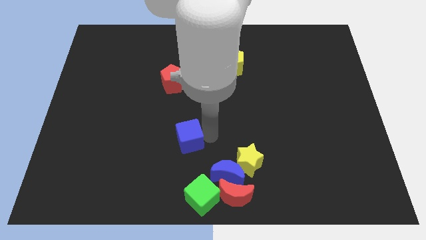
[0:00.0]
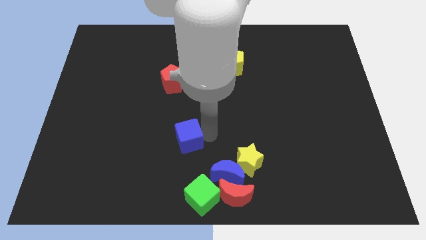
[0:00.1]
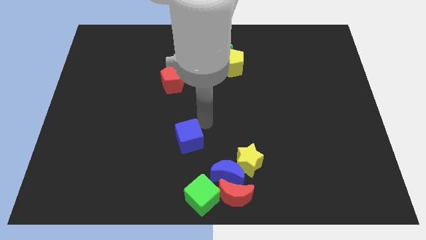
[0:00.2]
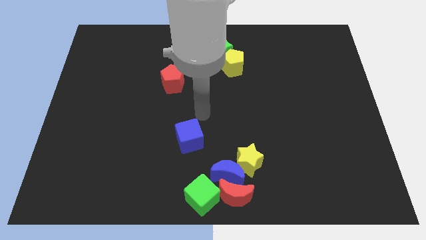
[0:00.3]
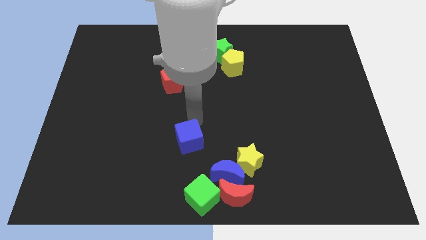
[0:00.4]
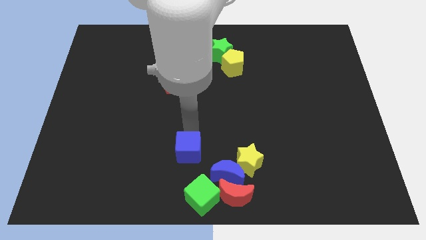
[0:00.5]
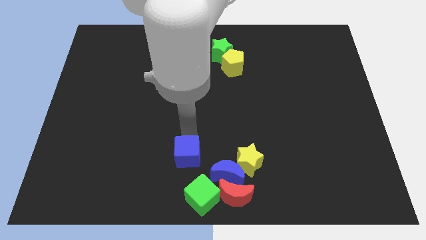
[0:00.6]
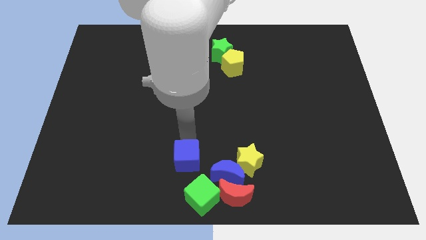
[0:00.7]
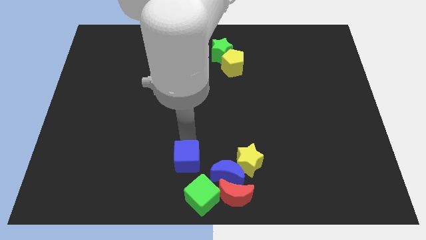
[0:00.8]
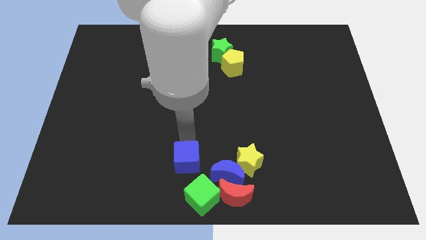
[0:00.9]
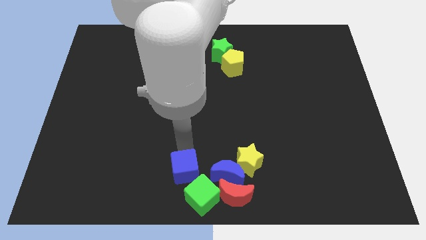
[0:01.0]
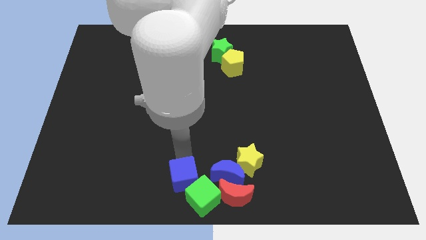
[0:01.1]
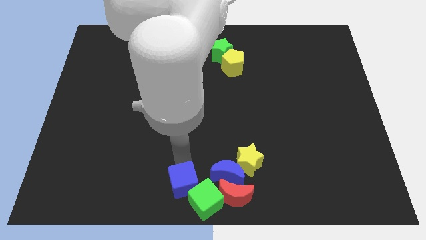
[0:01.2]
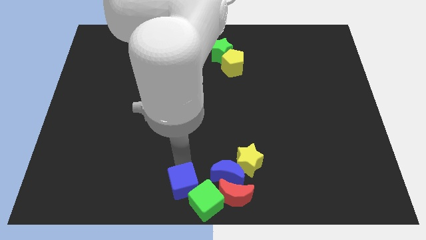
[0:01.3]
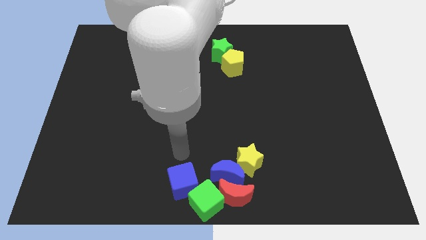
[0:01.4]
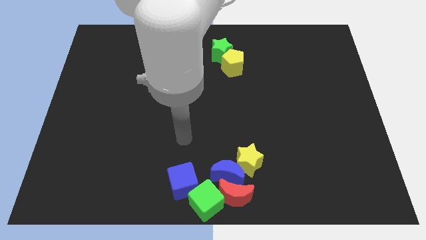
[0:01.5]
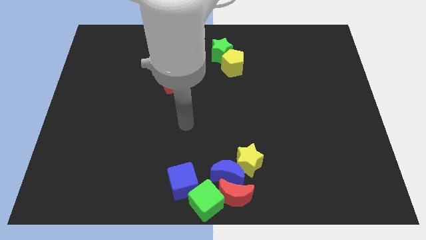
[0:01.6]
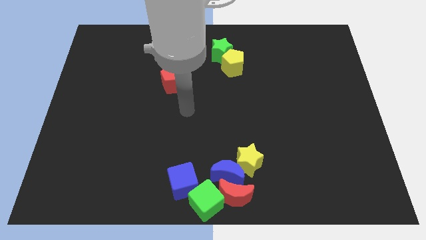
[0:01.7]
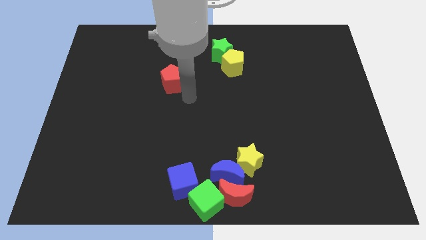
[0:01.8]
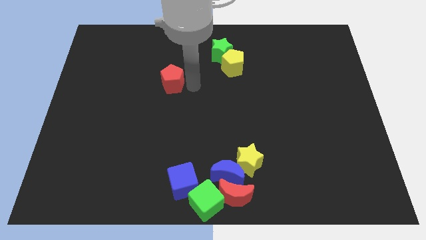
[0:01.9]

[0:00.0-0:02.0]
move the blue cube to the group of blocks at the bottom center of the board

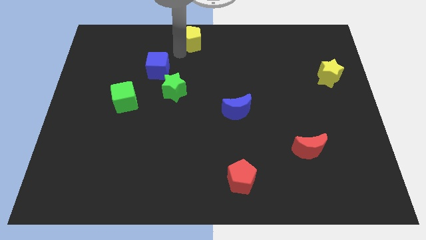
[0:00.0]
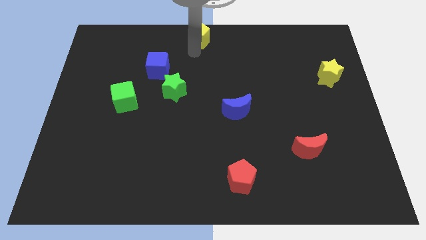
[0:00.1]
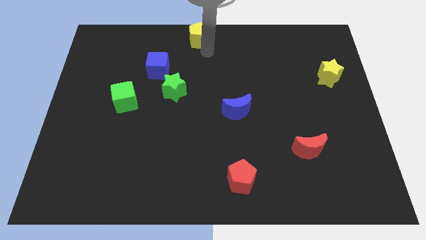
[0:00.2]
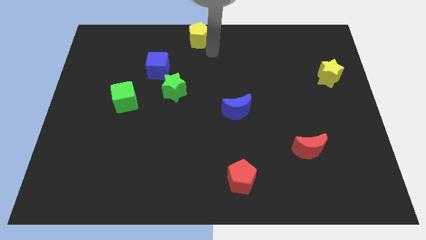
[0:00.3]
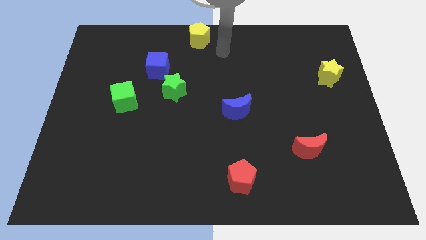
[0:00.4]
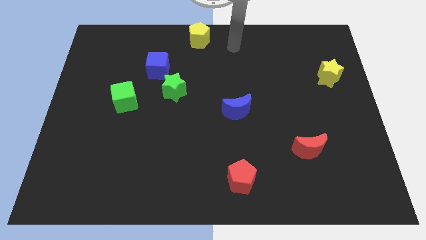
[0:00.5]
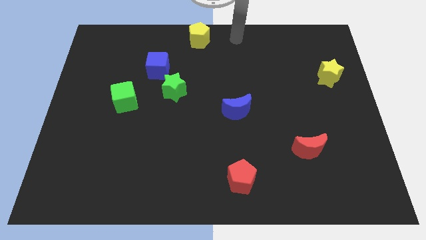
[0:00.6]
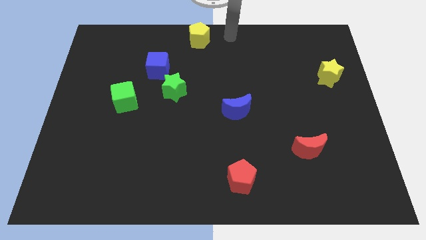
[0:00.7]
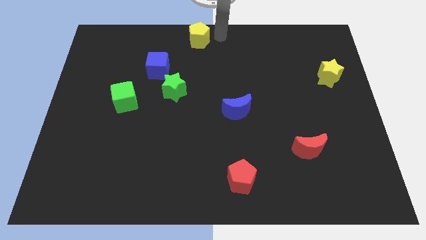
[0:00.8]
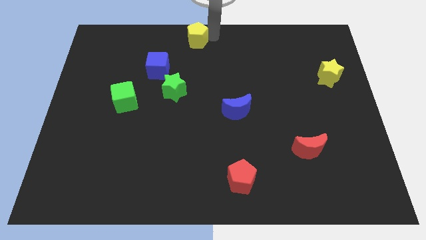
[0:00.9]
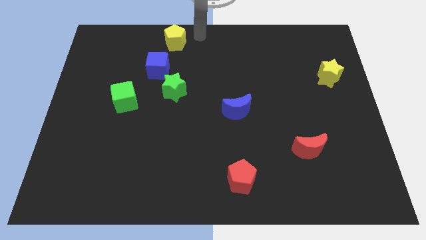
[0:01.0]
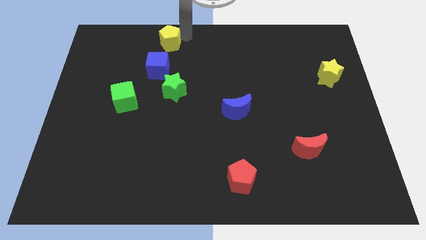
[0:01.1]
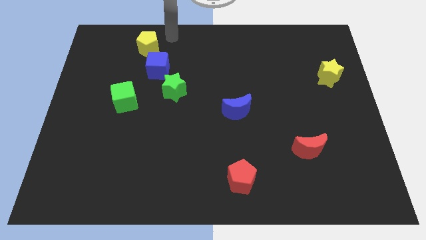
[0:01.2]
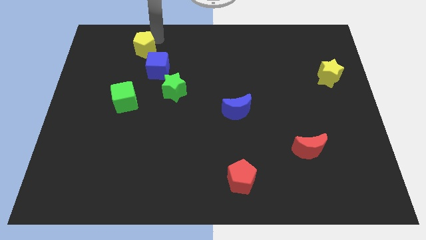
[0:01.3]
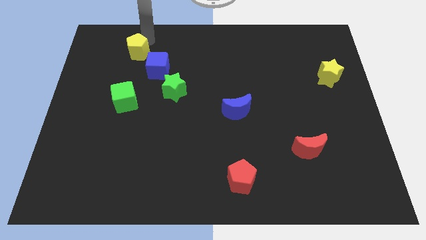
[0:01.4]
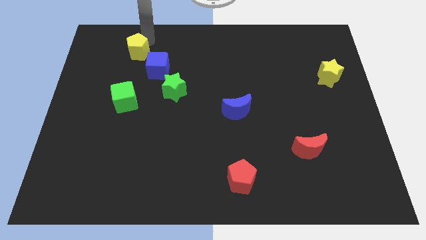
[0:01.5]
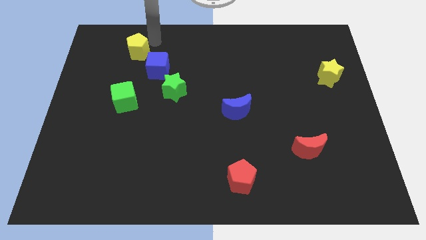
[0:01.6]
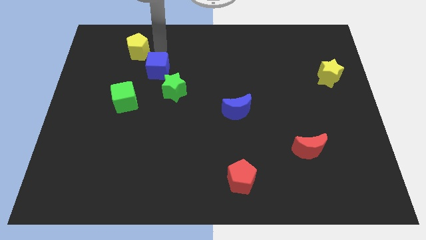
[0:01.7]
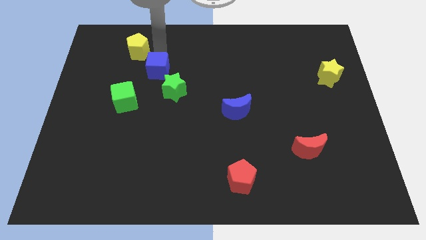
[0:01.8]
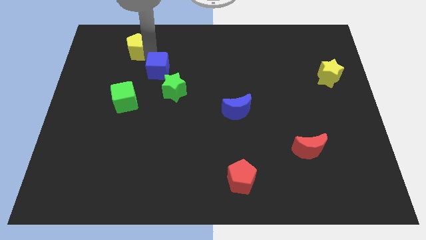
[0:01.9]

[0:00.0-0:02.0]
move the yellow pentagon to the top left side of the blue cube

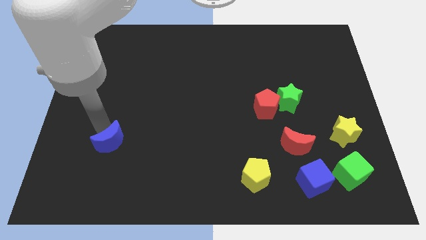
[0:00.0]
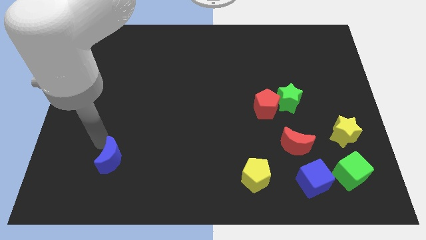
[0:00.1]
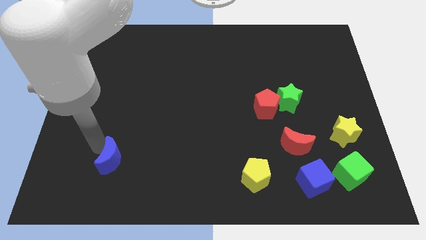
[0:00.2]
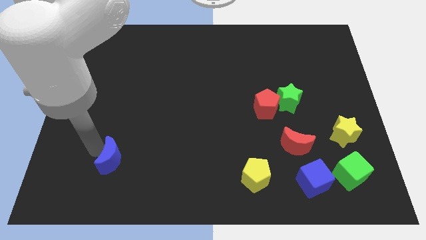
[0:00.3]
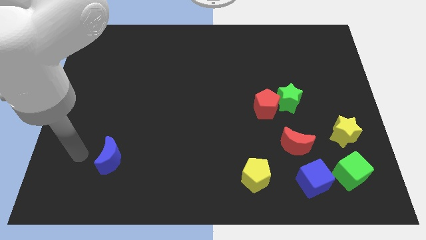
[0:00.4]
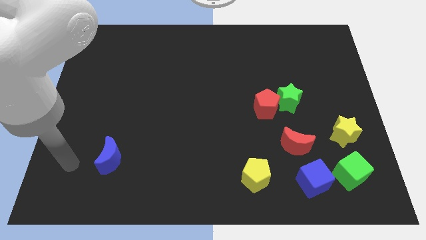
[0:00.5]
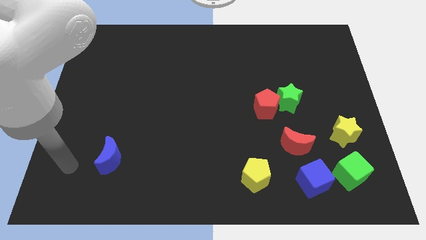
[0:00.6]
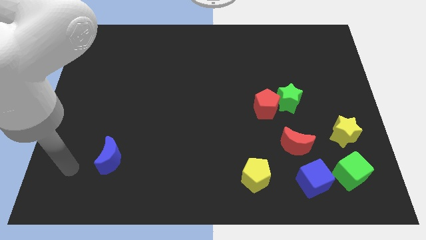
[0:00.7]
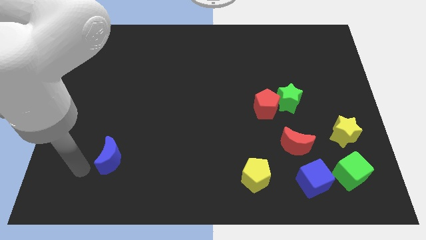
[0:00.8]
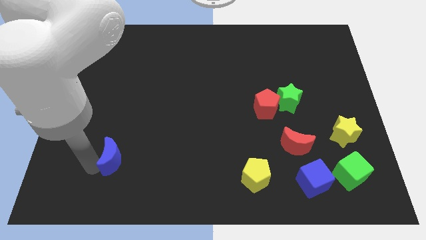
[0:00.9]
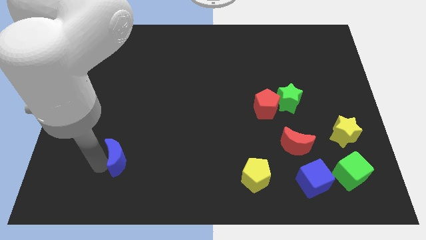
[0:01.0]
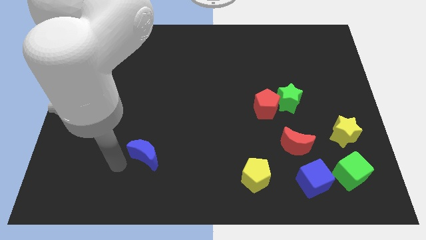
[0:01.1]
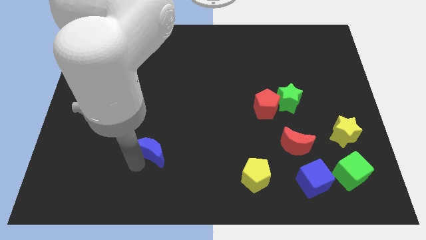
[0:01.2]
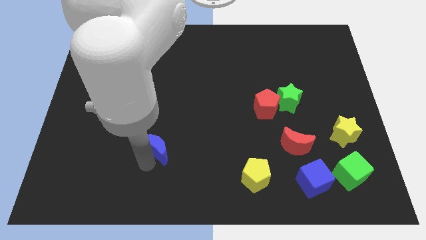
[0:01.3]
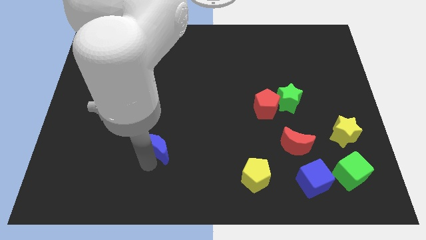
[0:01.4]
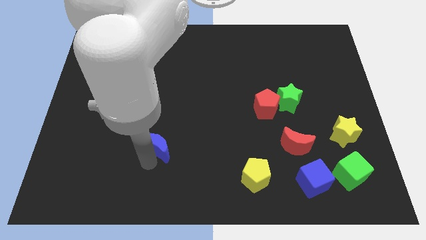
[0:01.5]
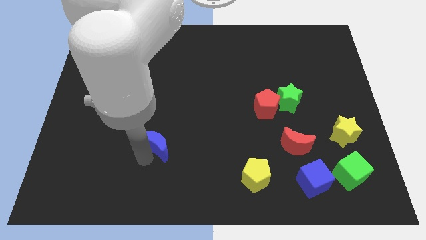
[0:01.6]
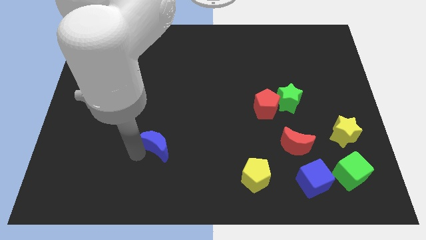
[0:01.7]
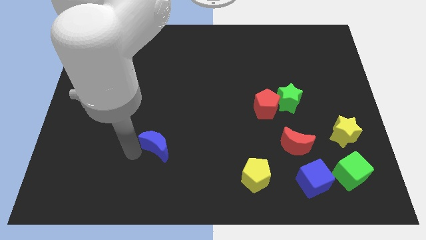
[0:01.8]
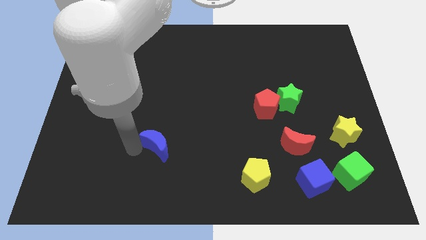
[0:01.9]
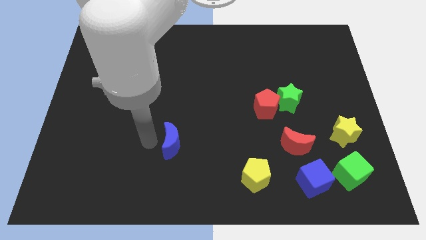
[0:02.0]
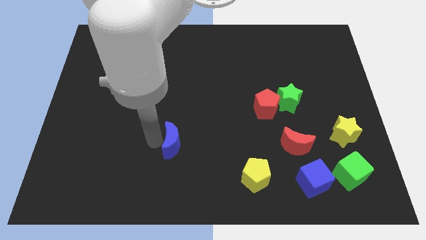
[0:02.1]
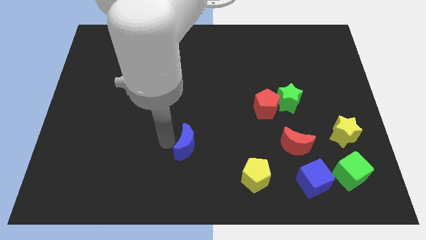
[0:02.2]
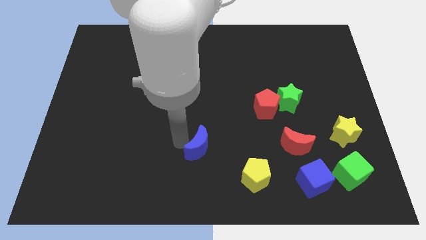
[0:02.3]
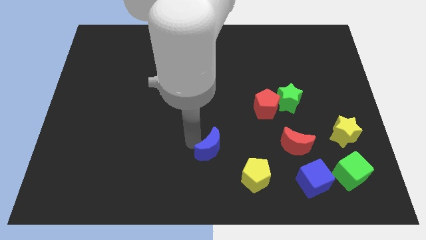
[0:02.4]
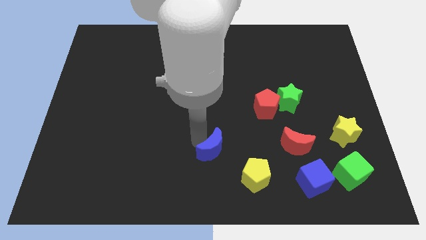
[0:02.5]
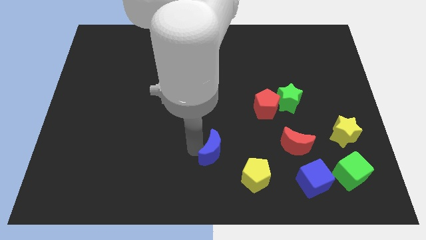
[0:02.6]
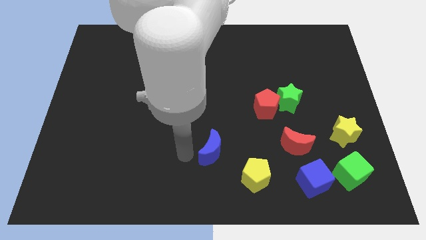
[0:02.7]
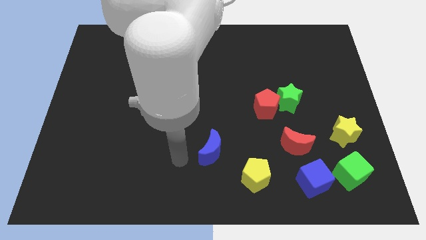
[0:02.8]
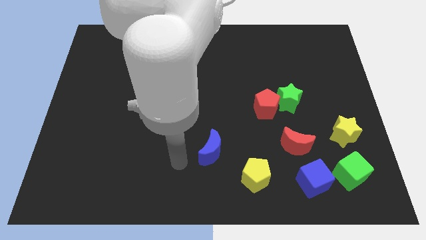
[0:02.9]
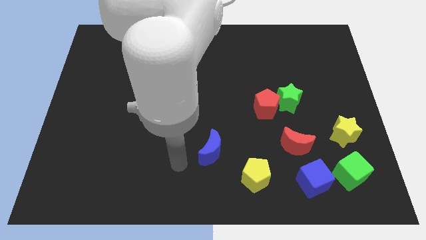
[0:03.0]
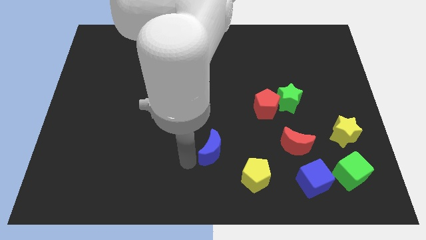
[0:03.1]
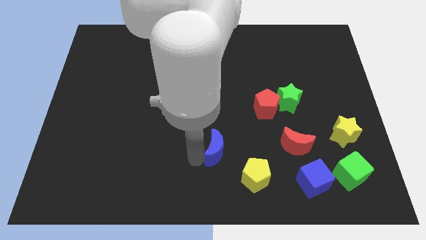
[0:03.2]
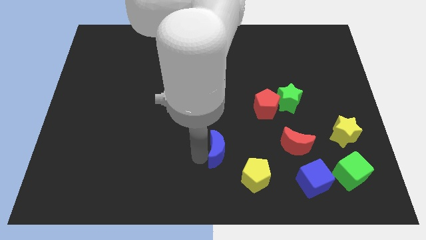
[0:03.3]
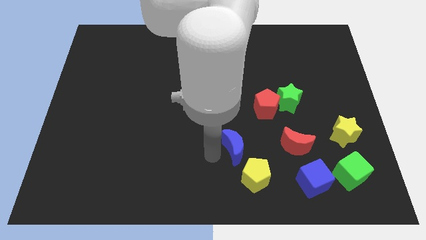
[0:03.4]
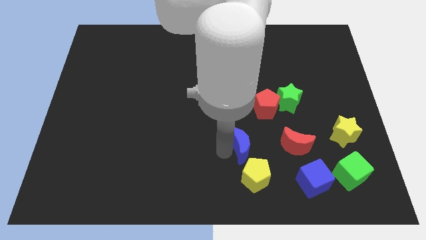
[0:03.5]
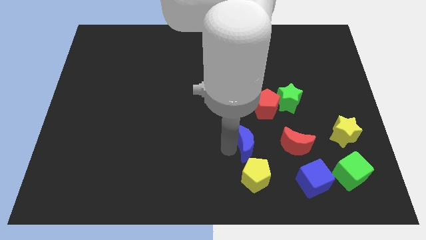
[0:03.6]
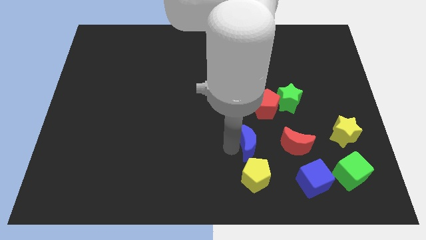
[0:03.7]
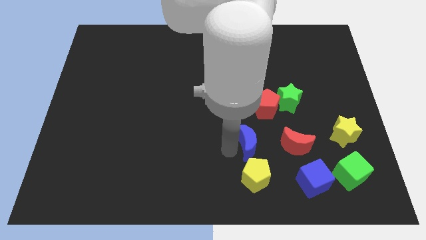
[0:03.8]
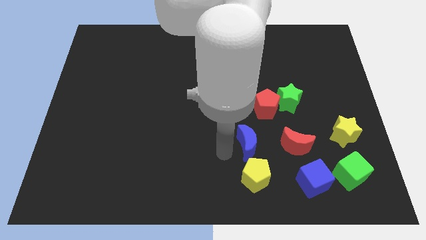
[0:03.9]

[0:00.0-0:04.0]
place the blue moon above the yellow pentagon

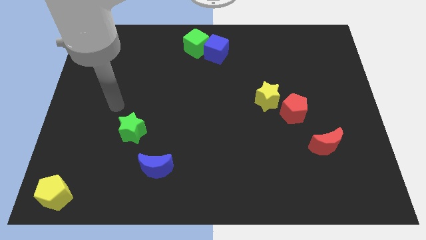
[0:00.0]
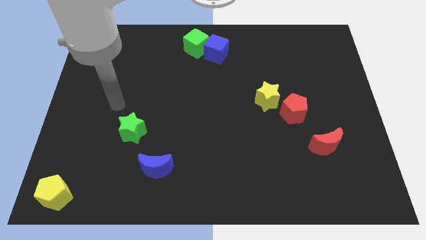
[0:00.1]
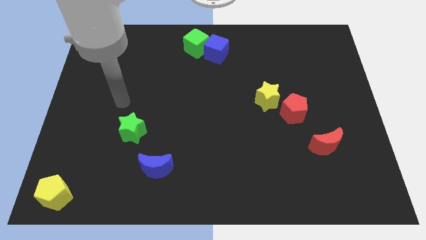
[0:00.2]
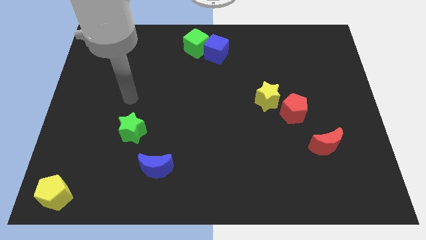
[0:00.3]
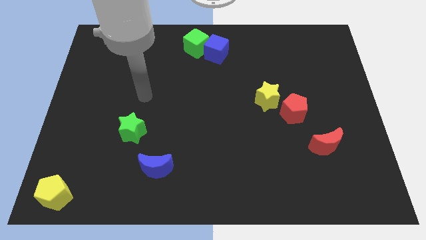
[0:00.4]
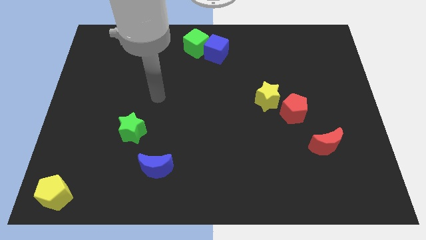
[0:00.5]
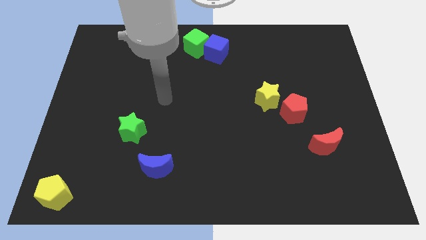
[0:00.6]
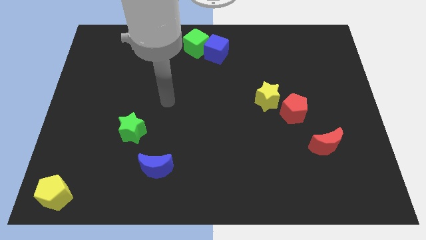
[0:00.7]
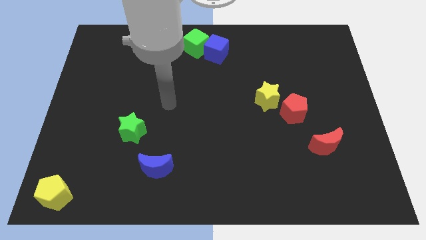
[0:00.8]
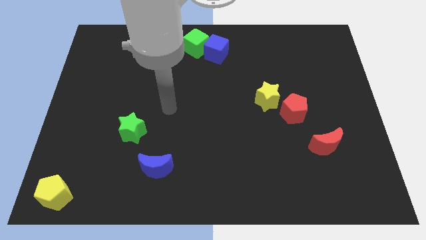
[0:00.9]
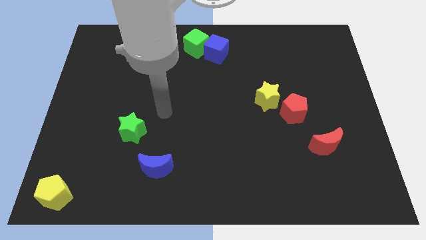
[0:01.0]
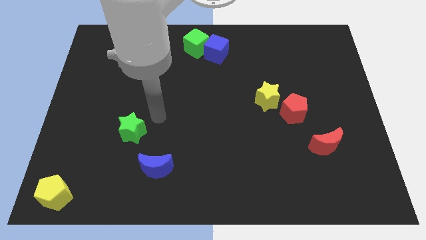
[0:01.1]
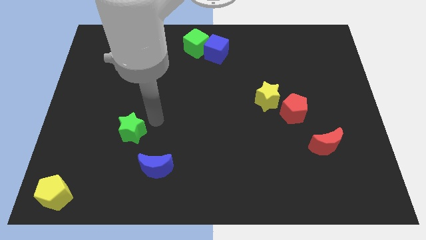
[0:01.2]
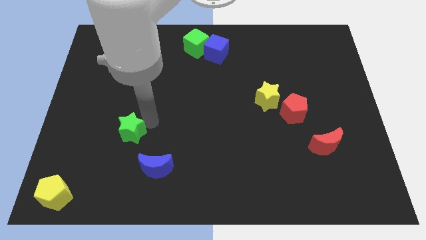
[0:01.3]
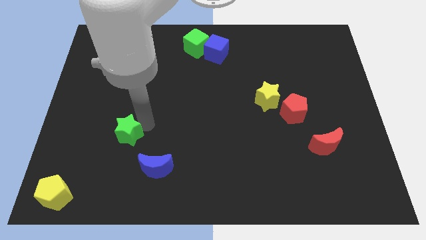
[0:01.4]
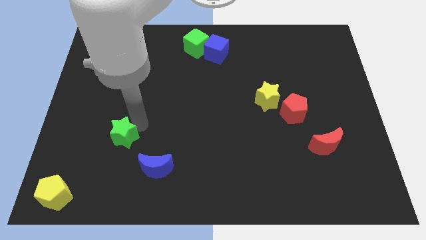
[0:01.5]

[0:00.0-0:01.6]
touch the top of green star
